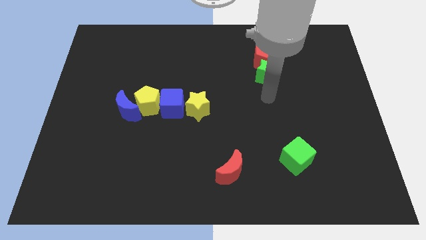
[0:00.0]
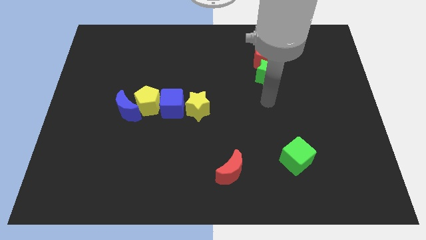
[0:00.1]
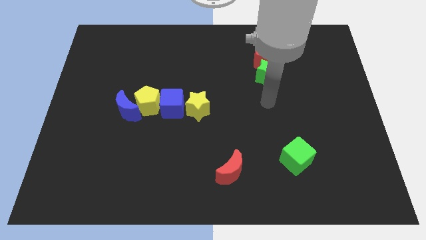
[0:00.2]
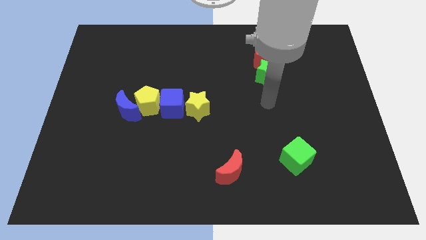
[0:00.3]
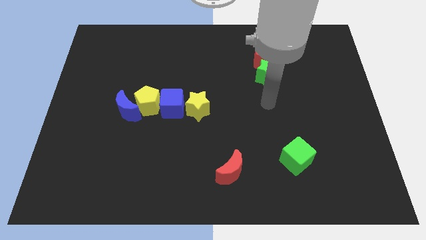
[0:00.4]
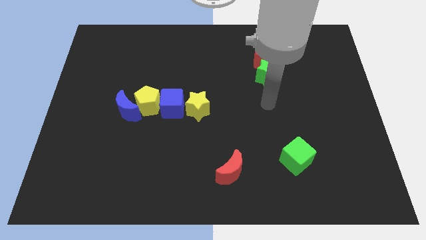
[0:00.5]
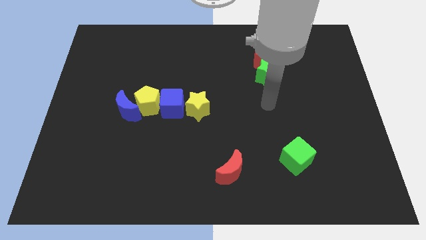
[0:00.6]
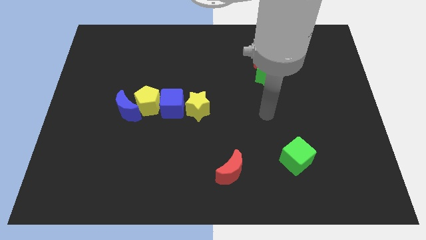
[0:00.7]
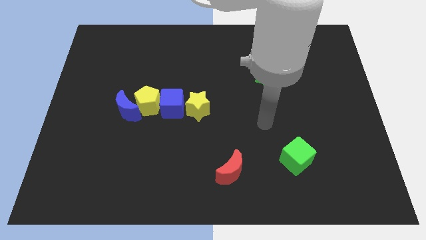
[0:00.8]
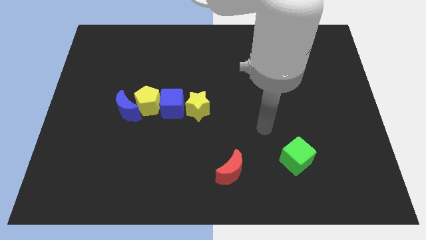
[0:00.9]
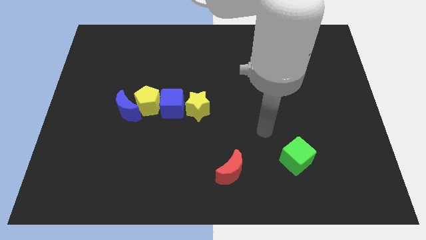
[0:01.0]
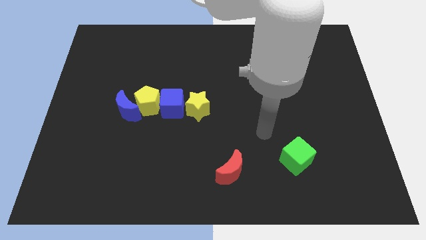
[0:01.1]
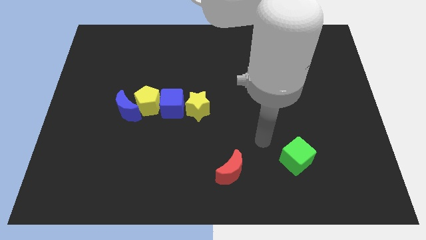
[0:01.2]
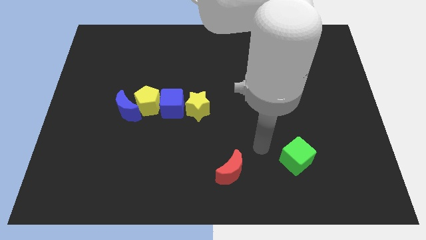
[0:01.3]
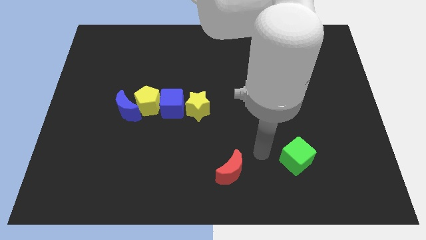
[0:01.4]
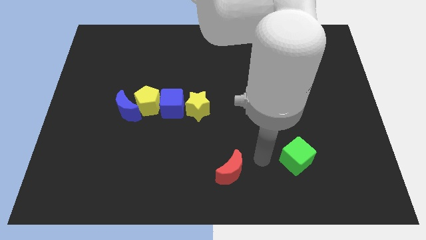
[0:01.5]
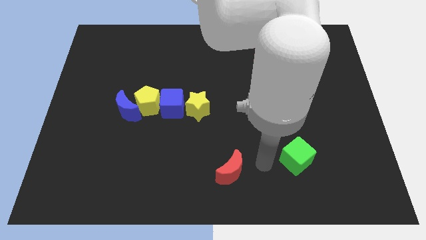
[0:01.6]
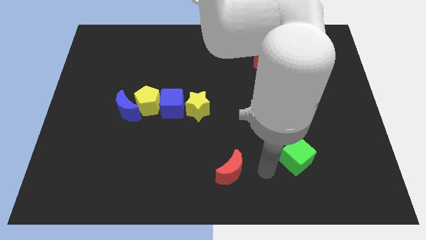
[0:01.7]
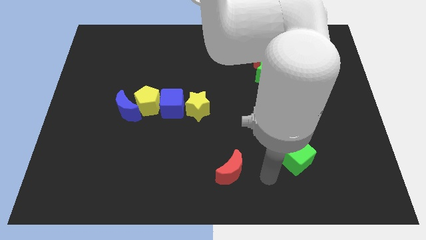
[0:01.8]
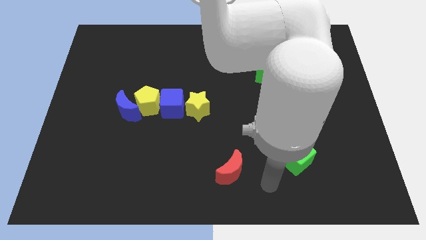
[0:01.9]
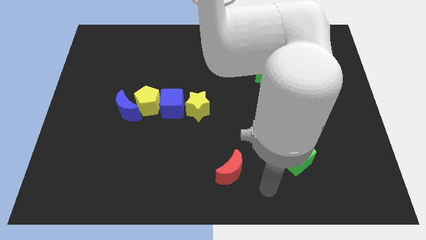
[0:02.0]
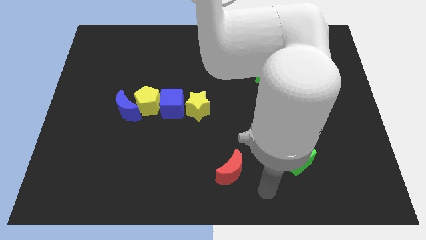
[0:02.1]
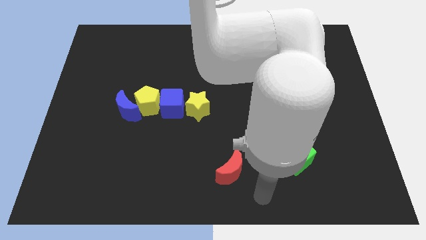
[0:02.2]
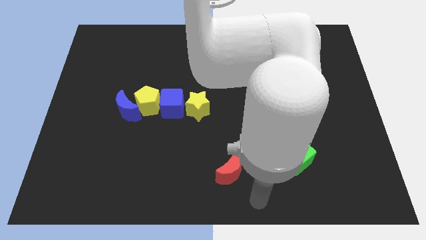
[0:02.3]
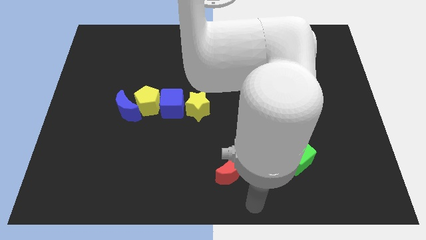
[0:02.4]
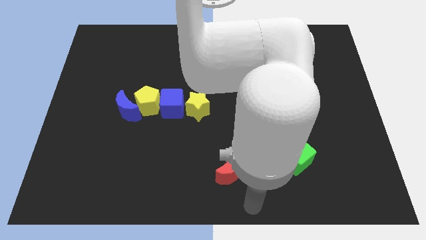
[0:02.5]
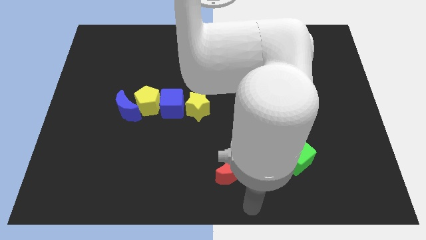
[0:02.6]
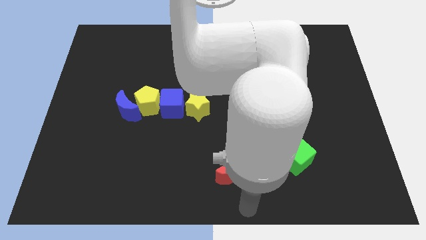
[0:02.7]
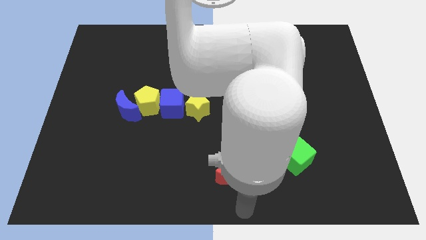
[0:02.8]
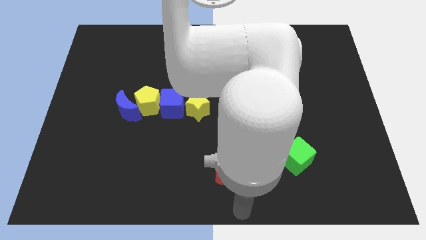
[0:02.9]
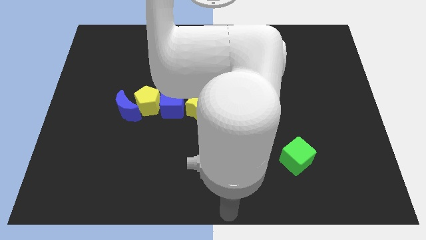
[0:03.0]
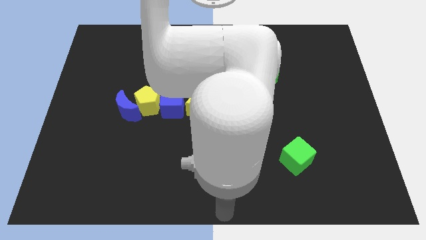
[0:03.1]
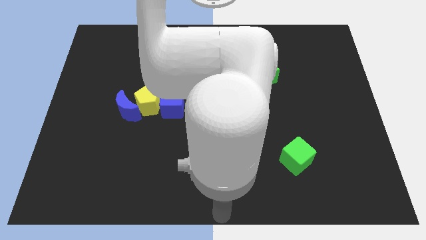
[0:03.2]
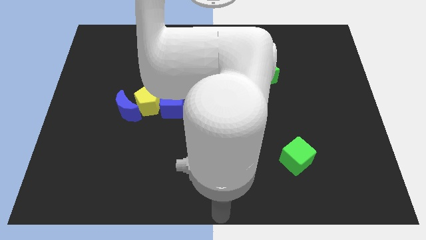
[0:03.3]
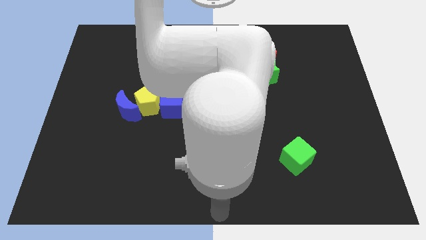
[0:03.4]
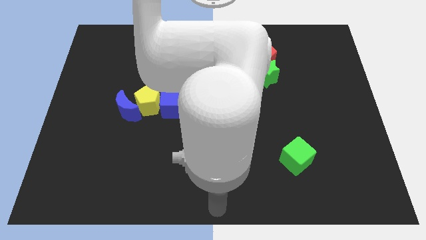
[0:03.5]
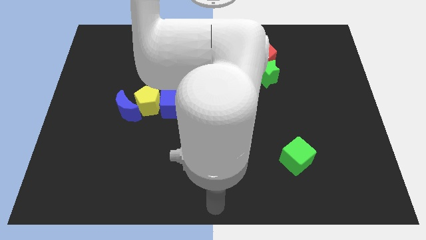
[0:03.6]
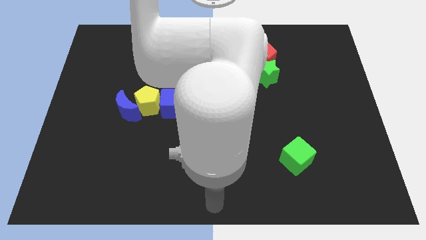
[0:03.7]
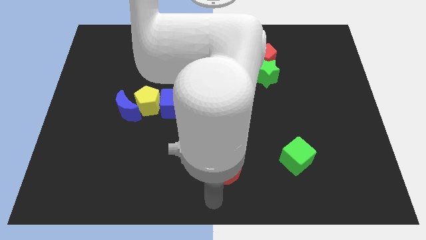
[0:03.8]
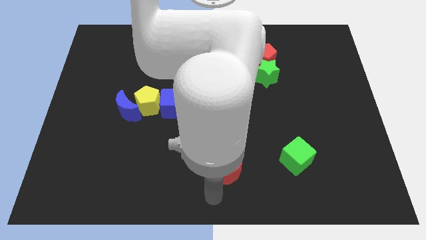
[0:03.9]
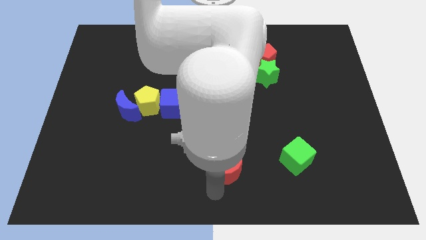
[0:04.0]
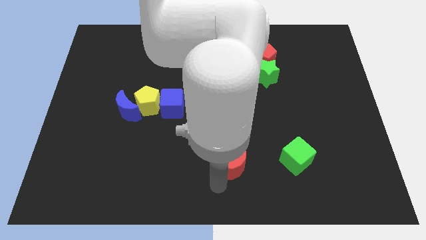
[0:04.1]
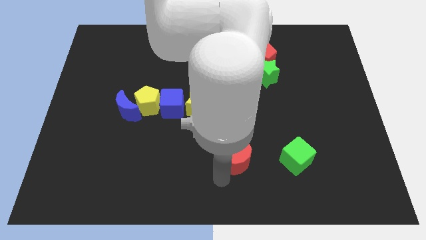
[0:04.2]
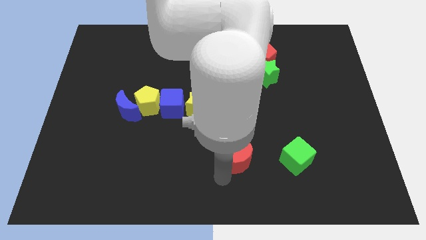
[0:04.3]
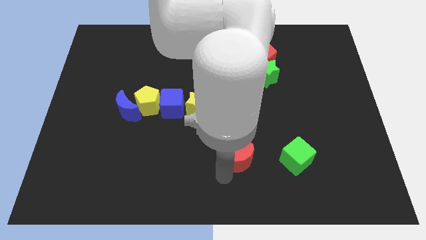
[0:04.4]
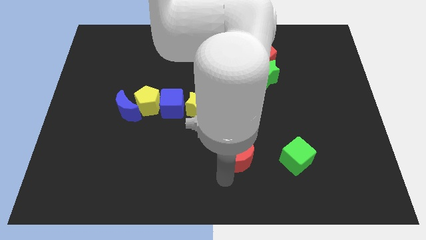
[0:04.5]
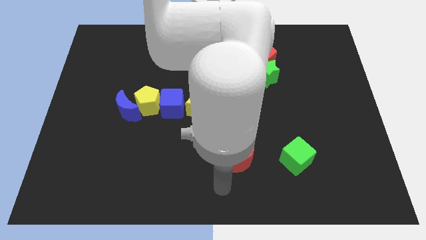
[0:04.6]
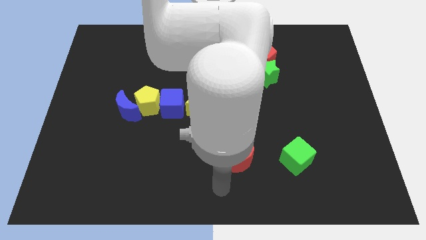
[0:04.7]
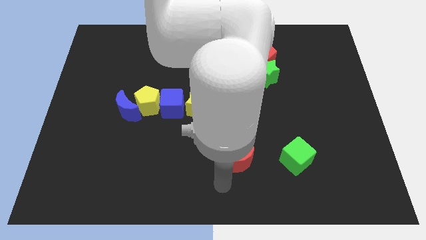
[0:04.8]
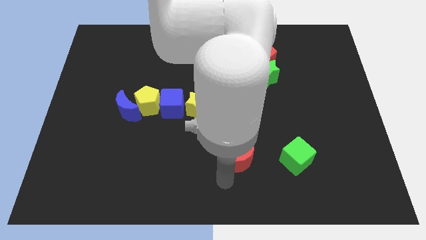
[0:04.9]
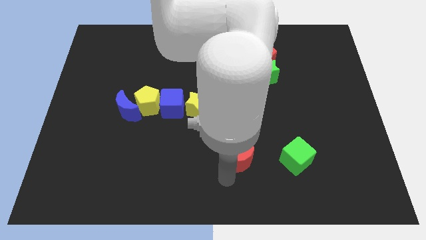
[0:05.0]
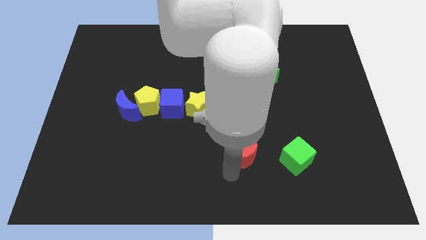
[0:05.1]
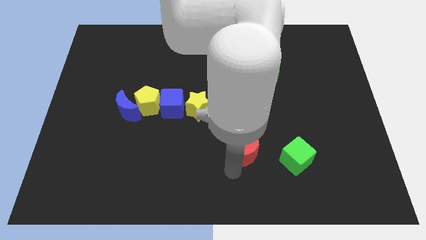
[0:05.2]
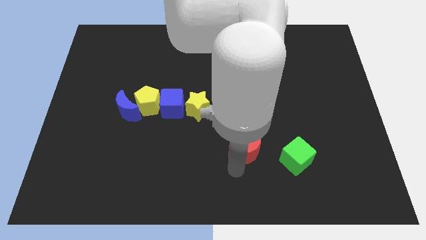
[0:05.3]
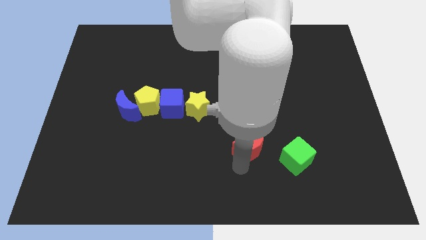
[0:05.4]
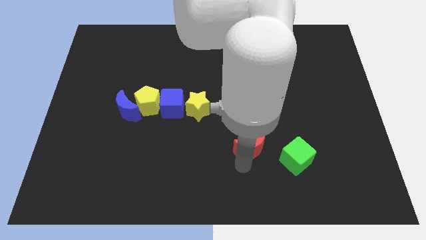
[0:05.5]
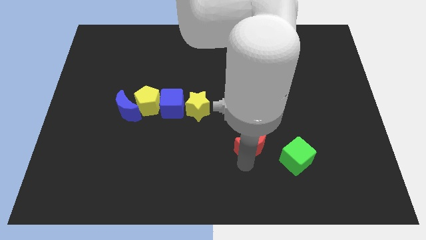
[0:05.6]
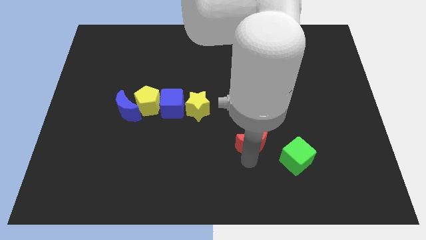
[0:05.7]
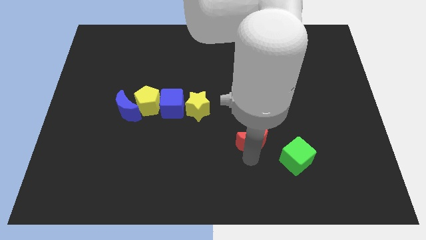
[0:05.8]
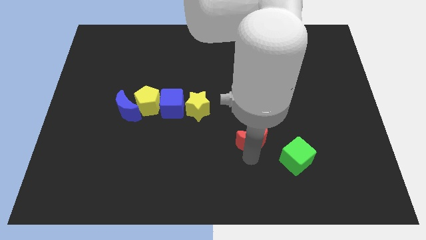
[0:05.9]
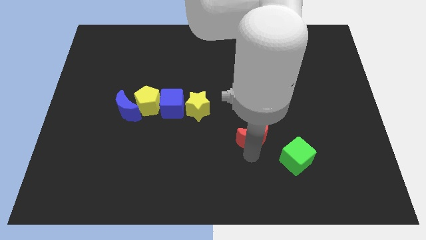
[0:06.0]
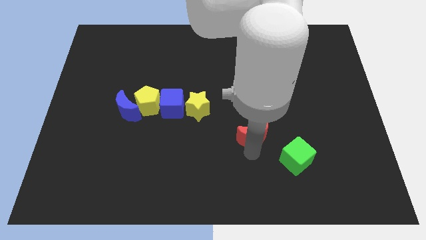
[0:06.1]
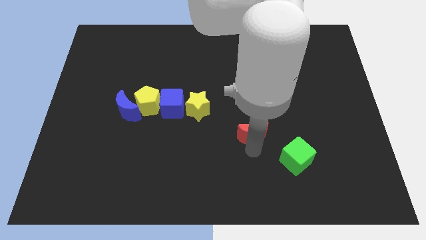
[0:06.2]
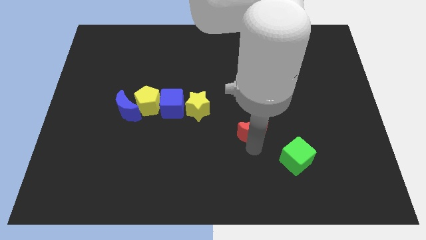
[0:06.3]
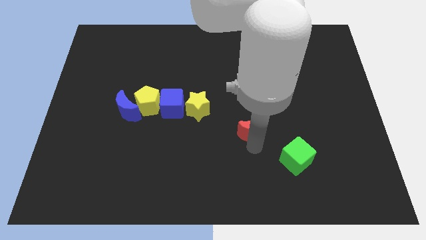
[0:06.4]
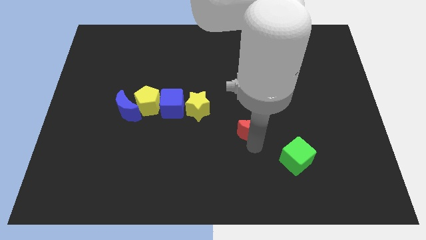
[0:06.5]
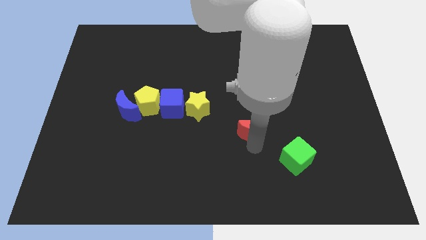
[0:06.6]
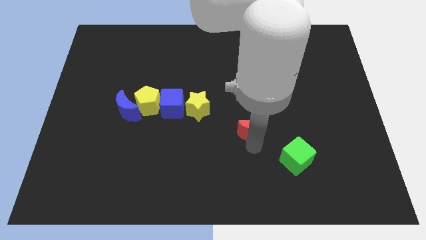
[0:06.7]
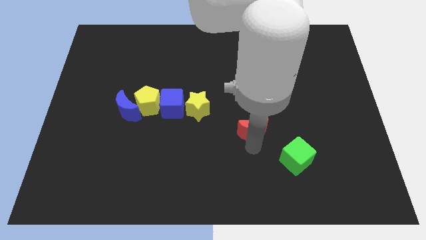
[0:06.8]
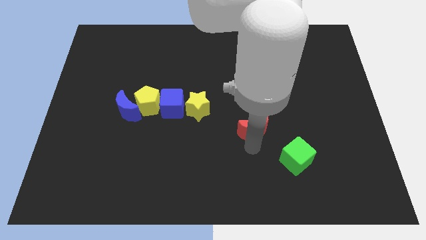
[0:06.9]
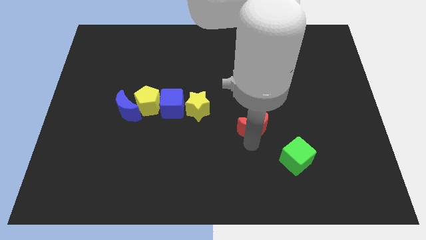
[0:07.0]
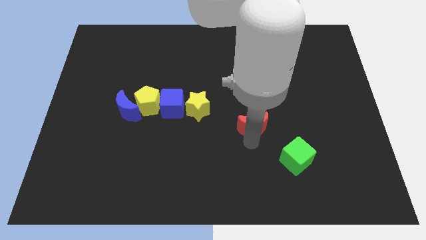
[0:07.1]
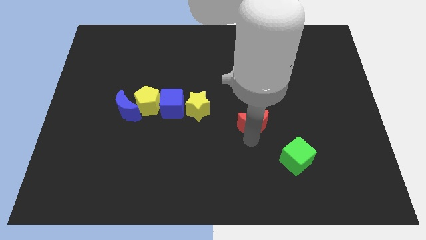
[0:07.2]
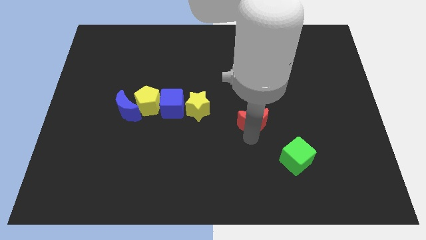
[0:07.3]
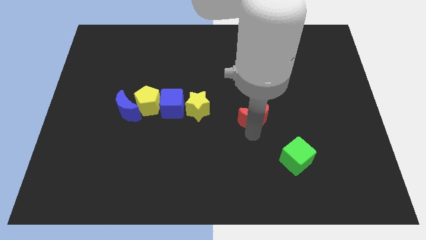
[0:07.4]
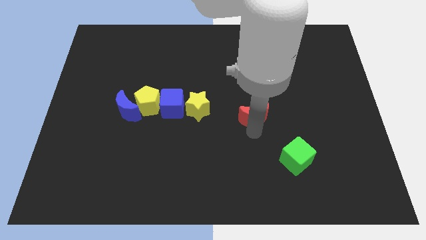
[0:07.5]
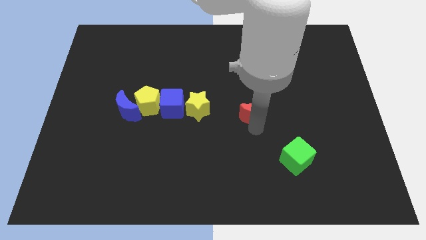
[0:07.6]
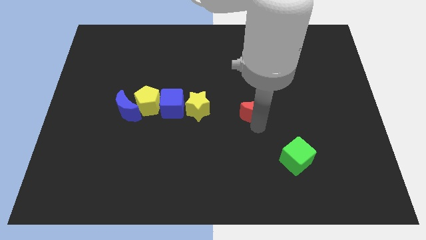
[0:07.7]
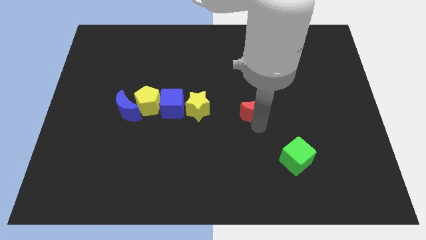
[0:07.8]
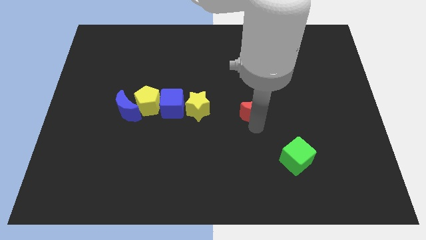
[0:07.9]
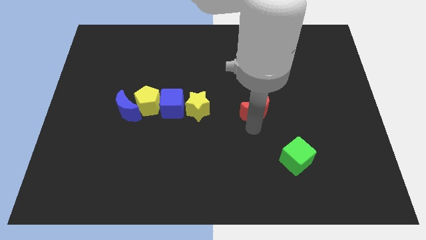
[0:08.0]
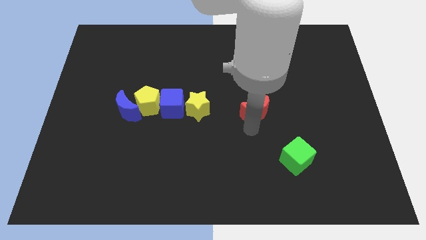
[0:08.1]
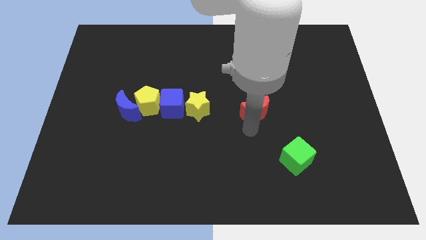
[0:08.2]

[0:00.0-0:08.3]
put the red moon horizontally at the right side of the yellow star

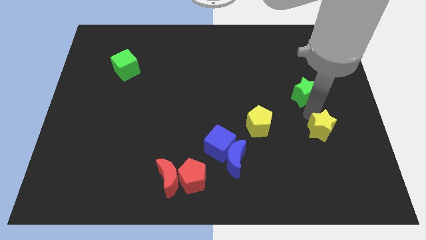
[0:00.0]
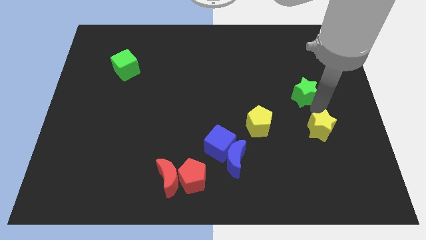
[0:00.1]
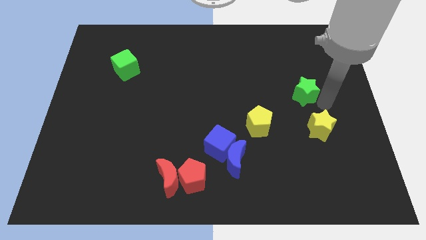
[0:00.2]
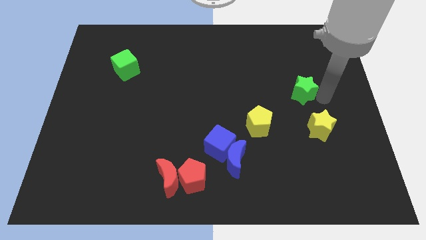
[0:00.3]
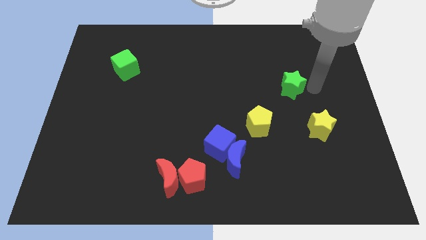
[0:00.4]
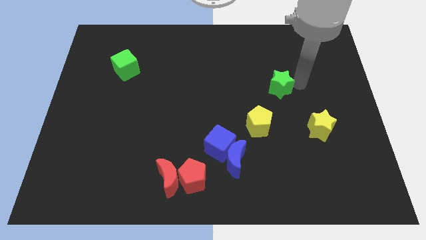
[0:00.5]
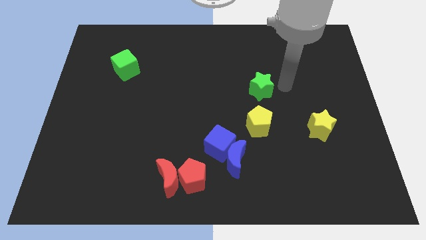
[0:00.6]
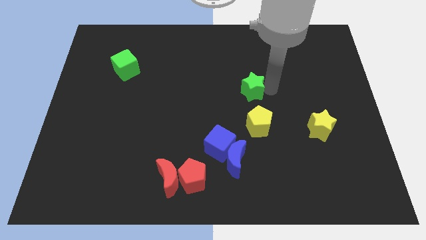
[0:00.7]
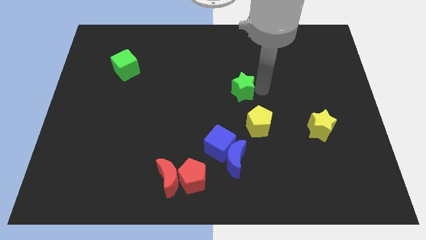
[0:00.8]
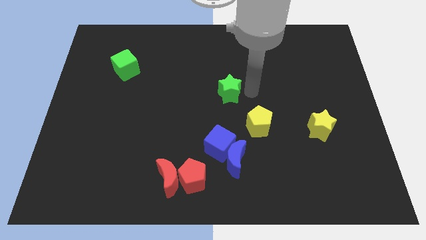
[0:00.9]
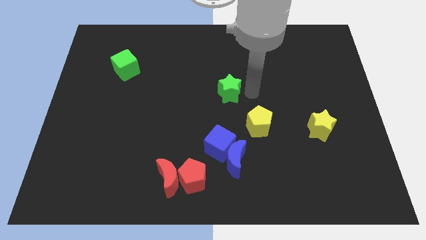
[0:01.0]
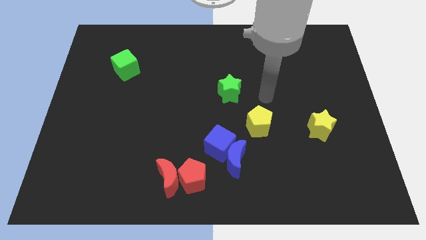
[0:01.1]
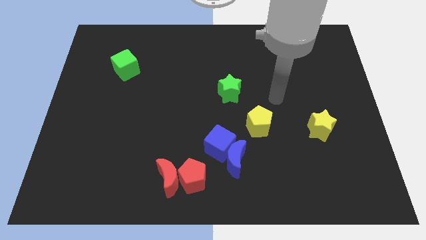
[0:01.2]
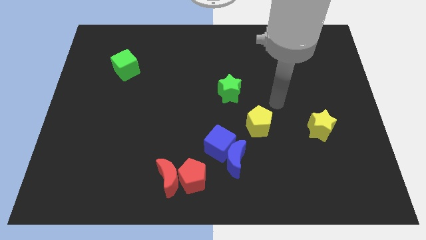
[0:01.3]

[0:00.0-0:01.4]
place the green star diagonally top left to the yellow pentagon
